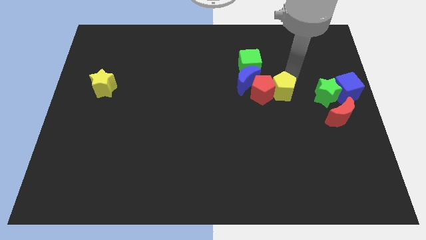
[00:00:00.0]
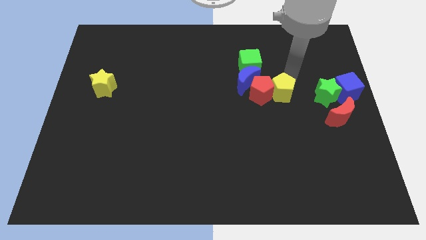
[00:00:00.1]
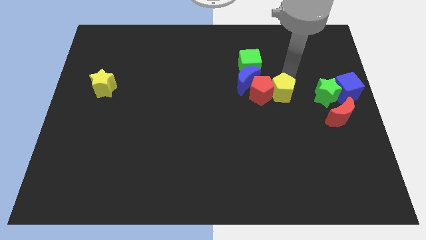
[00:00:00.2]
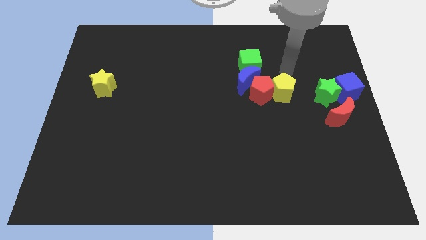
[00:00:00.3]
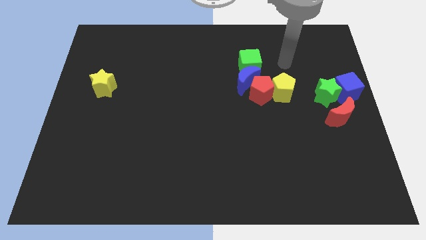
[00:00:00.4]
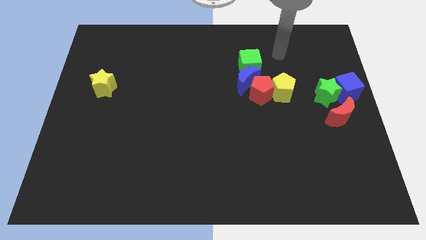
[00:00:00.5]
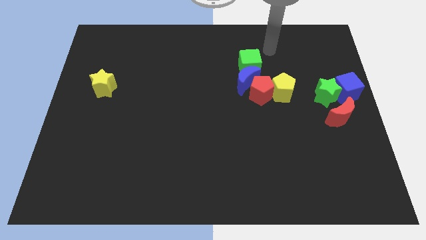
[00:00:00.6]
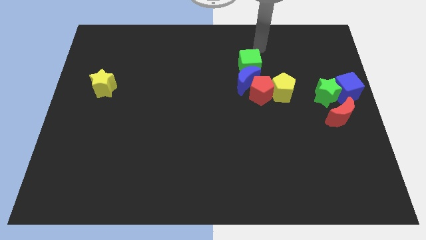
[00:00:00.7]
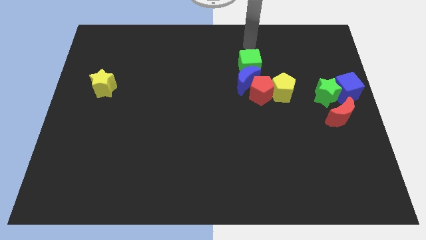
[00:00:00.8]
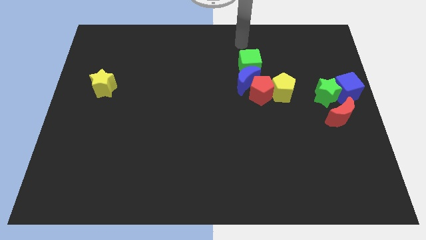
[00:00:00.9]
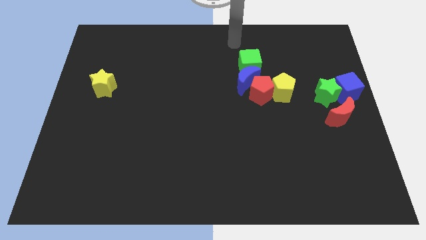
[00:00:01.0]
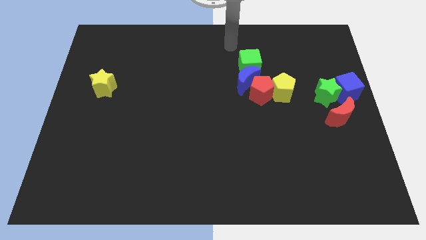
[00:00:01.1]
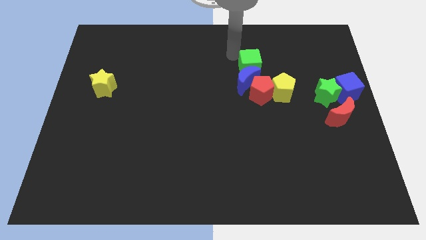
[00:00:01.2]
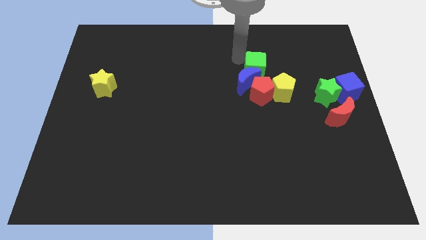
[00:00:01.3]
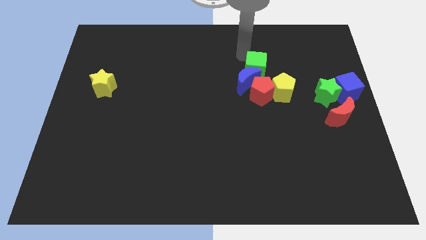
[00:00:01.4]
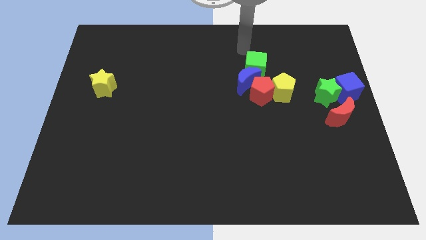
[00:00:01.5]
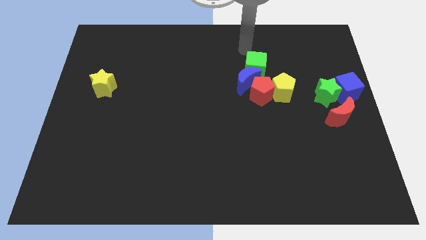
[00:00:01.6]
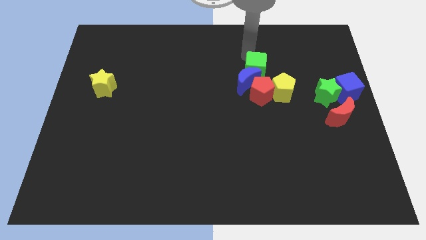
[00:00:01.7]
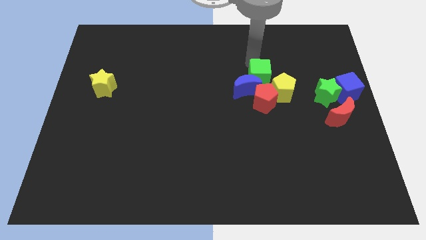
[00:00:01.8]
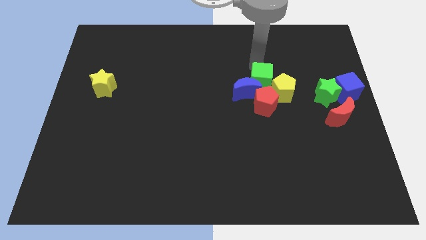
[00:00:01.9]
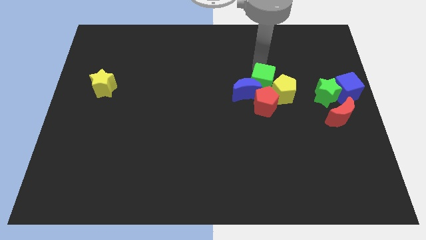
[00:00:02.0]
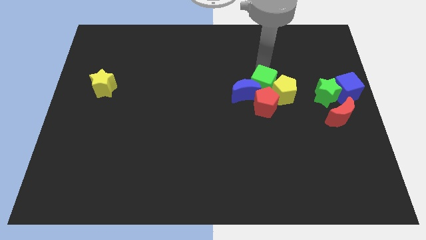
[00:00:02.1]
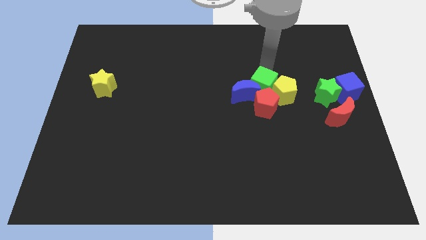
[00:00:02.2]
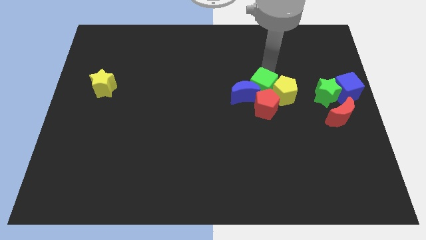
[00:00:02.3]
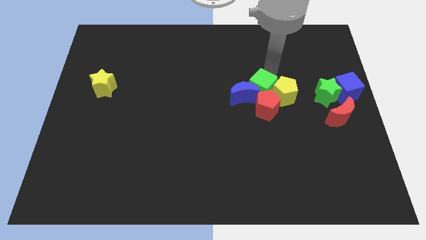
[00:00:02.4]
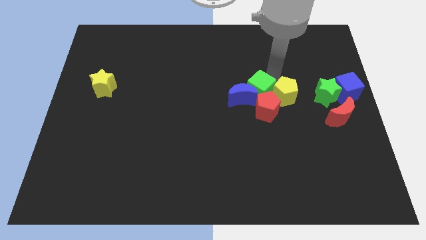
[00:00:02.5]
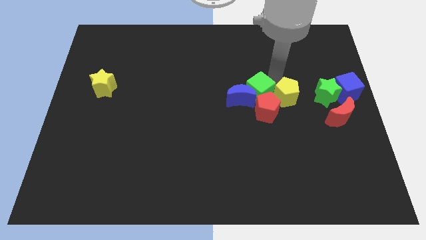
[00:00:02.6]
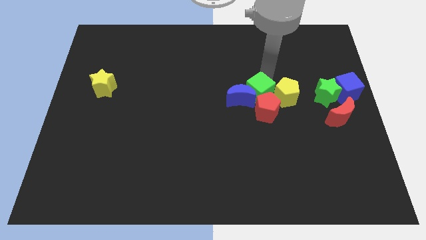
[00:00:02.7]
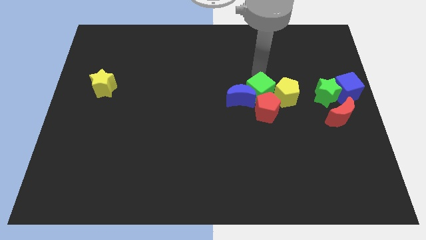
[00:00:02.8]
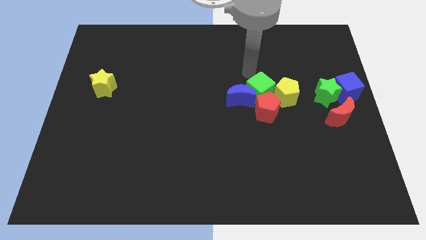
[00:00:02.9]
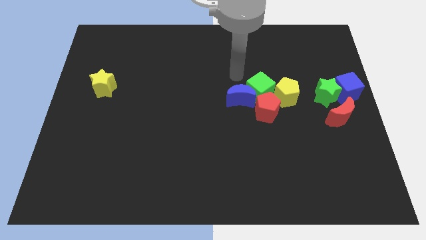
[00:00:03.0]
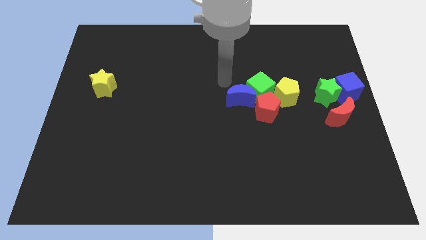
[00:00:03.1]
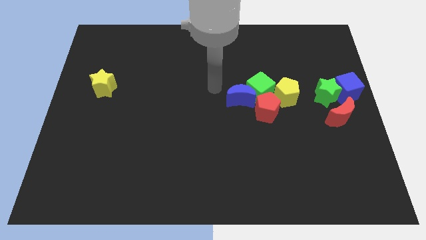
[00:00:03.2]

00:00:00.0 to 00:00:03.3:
push the group of blocks towards the bottom

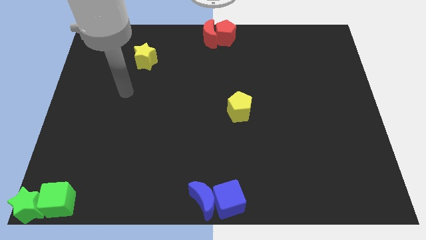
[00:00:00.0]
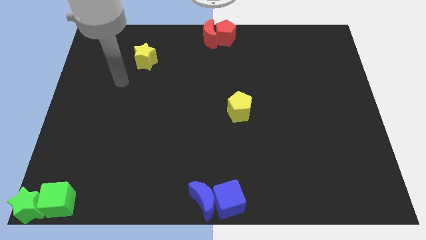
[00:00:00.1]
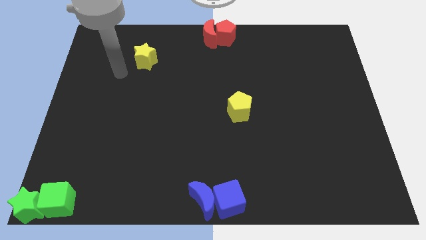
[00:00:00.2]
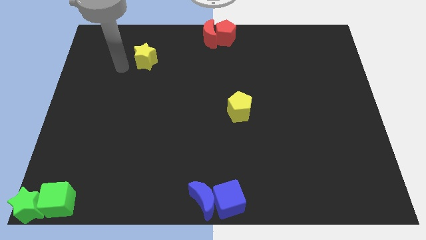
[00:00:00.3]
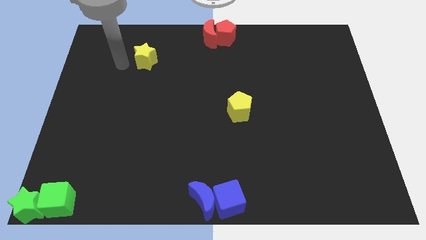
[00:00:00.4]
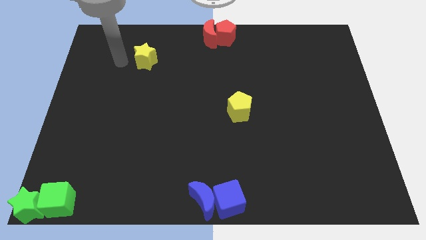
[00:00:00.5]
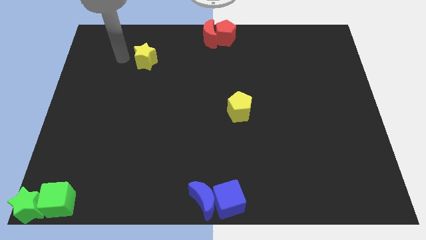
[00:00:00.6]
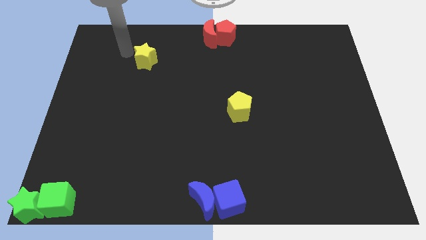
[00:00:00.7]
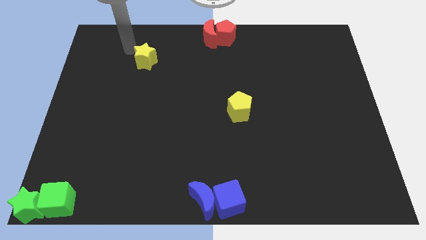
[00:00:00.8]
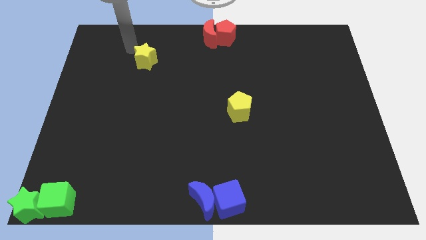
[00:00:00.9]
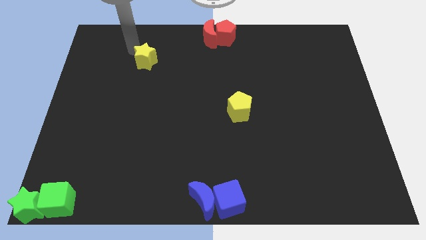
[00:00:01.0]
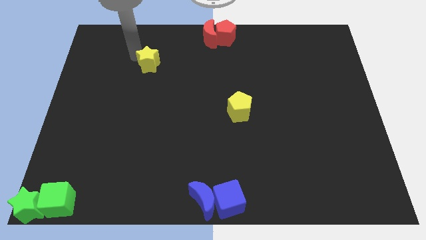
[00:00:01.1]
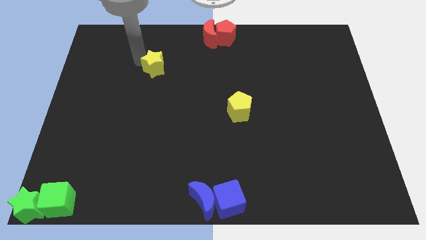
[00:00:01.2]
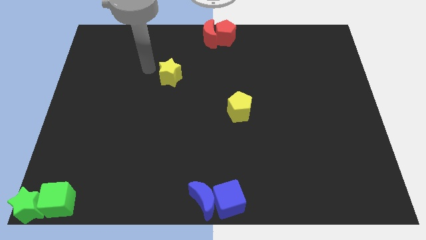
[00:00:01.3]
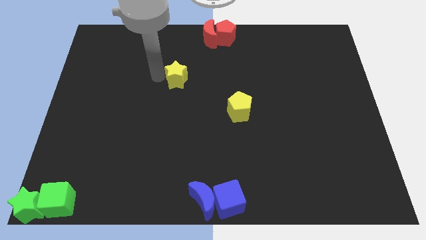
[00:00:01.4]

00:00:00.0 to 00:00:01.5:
push yellow star towards slightly to the center

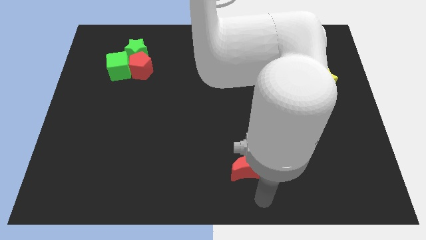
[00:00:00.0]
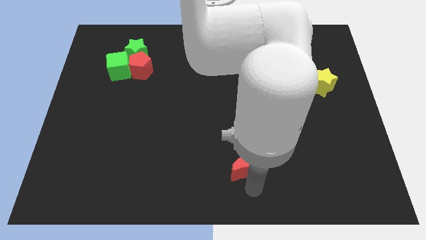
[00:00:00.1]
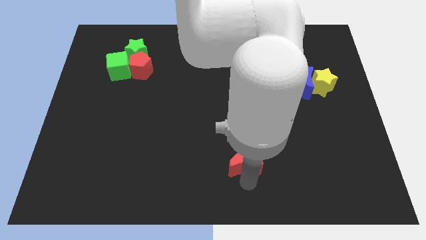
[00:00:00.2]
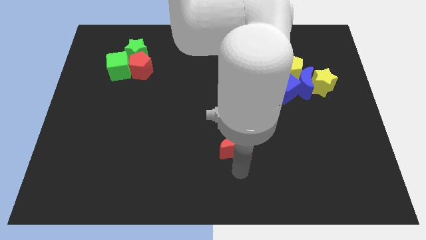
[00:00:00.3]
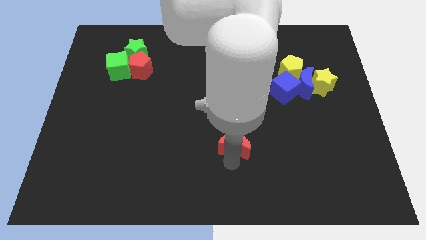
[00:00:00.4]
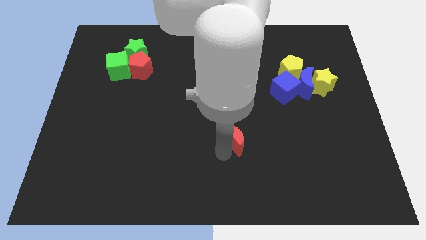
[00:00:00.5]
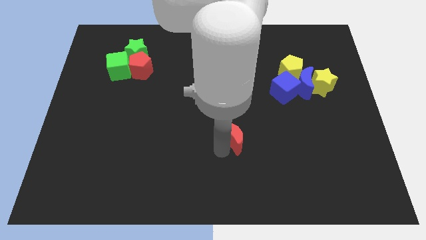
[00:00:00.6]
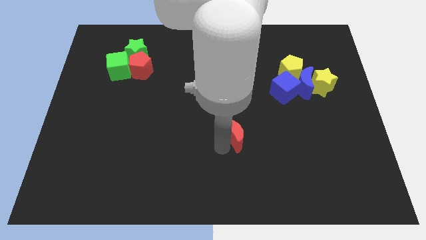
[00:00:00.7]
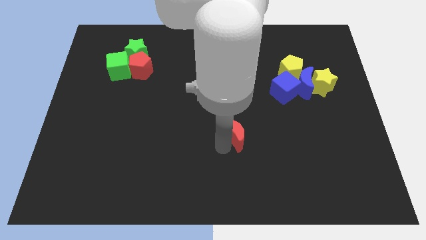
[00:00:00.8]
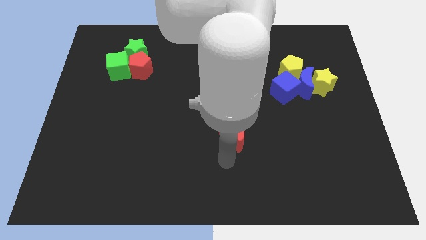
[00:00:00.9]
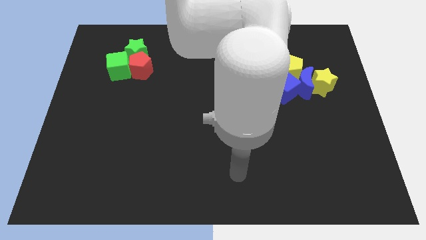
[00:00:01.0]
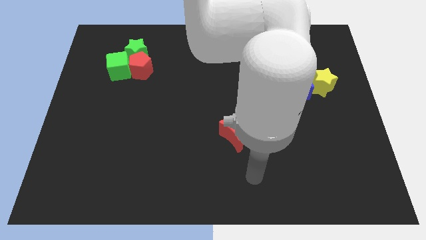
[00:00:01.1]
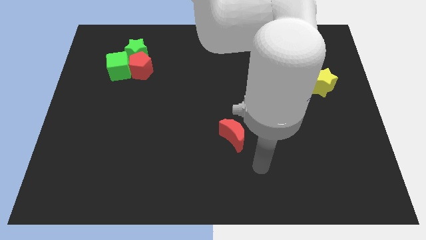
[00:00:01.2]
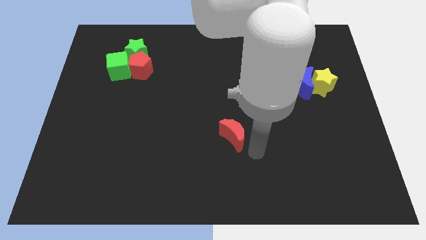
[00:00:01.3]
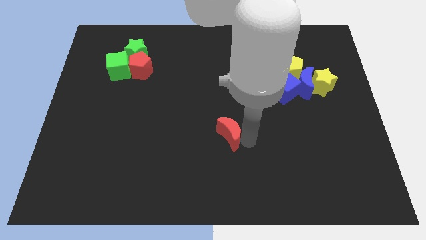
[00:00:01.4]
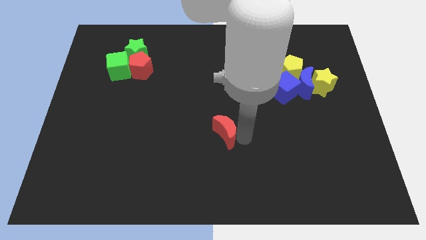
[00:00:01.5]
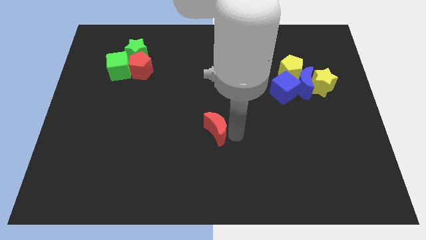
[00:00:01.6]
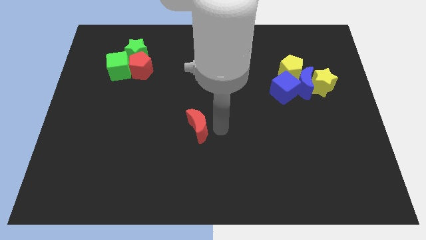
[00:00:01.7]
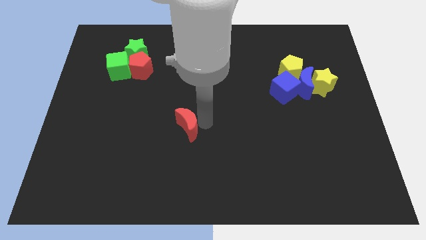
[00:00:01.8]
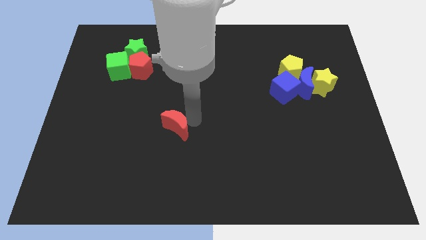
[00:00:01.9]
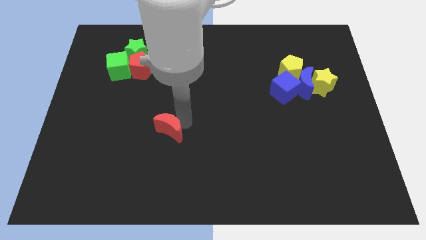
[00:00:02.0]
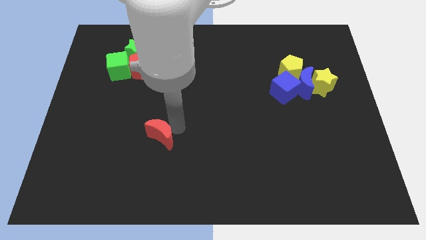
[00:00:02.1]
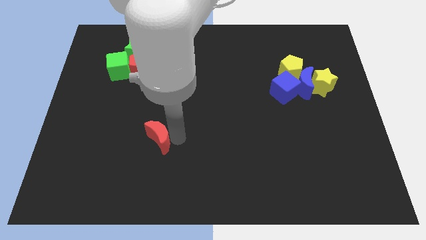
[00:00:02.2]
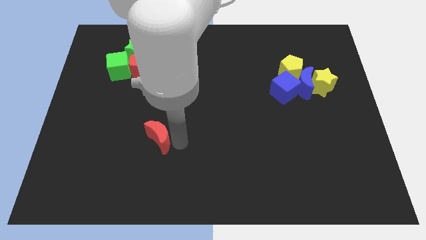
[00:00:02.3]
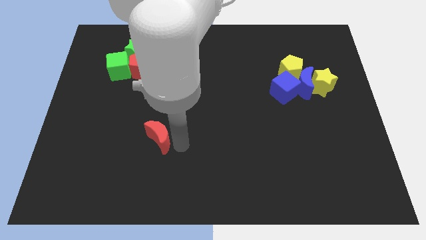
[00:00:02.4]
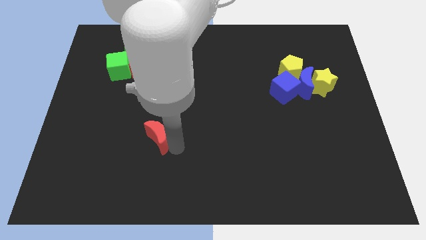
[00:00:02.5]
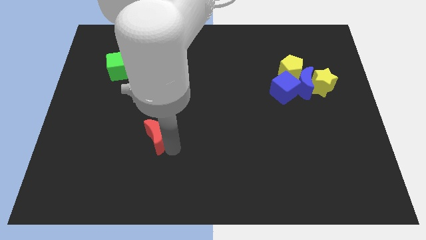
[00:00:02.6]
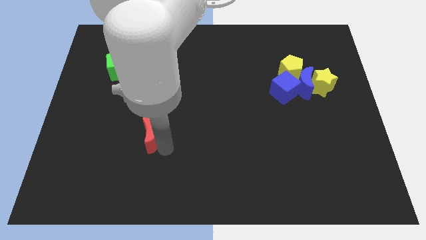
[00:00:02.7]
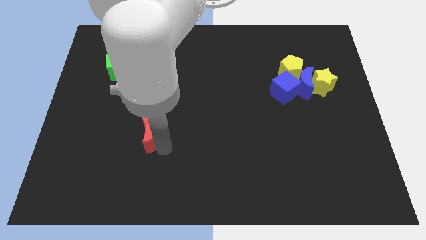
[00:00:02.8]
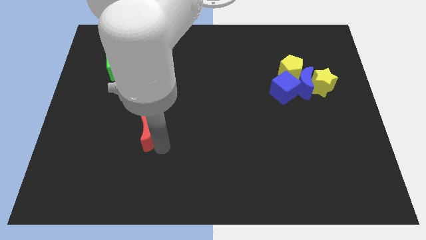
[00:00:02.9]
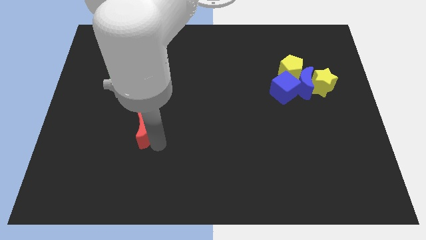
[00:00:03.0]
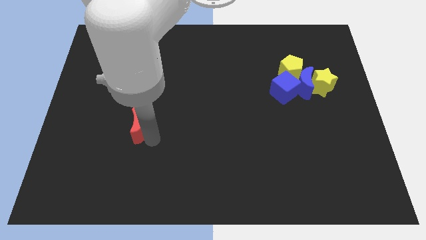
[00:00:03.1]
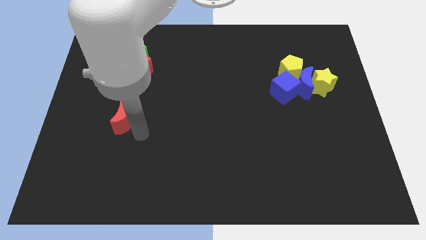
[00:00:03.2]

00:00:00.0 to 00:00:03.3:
push the red crescent to the bottom of the red pentagon

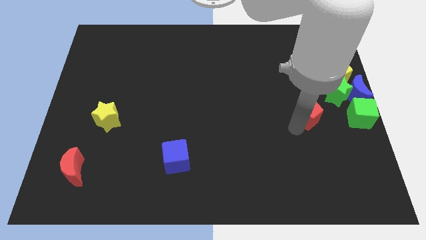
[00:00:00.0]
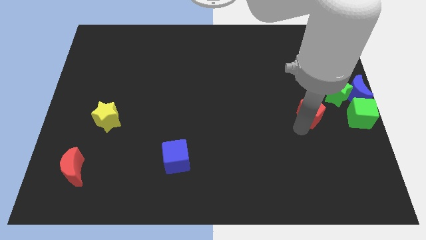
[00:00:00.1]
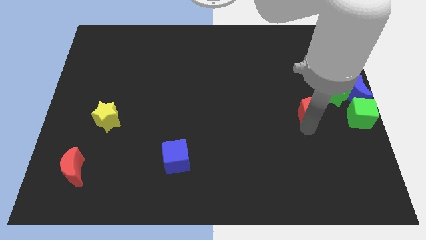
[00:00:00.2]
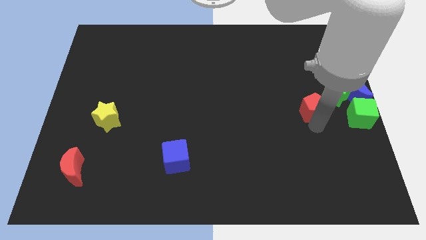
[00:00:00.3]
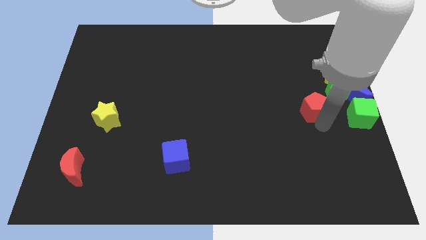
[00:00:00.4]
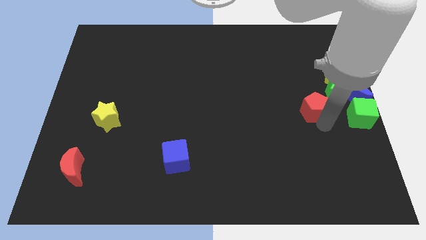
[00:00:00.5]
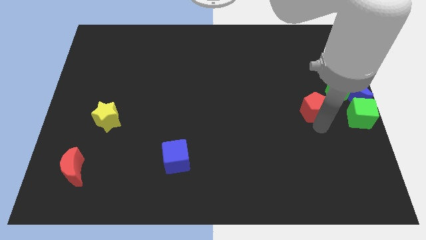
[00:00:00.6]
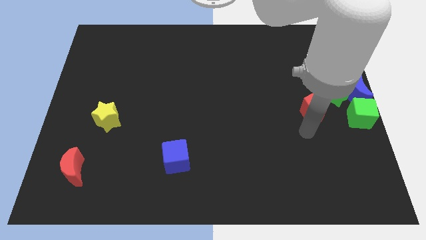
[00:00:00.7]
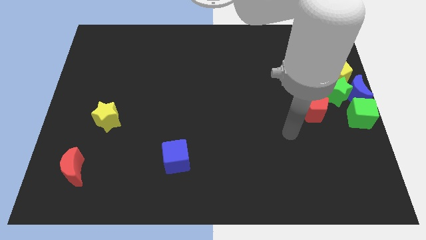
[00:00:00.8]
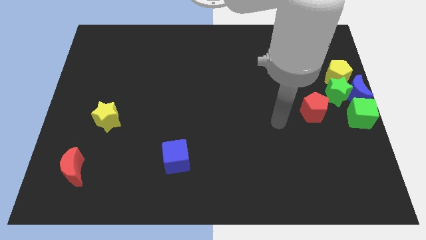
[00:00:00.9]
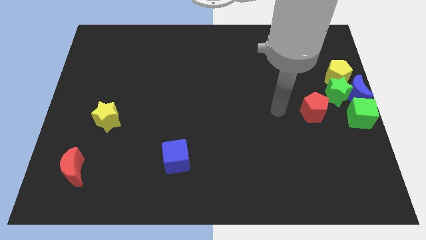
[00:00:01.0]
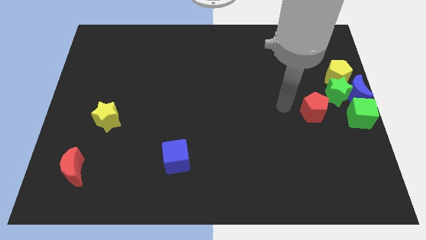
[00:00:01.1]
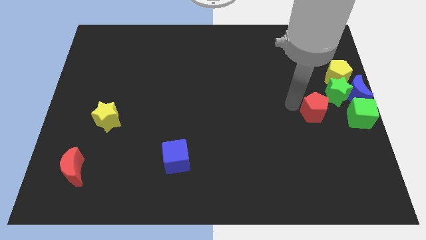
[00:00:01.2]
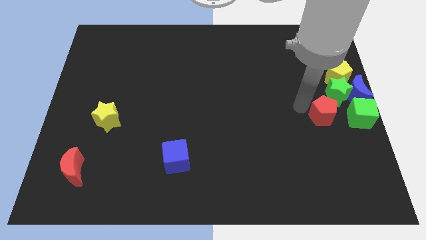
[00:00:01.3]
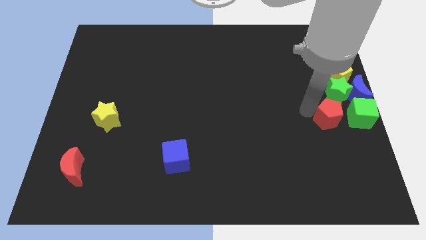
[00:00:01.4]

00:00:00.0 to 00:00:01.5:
place the red pentagon to the left of the green cube
